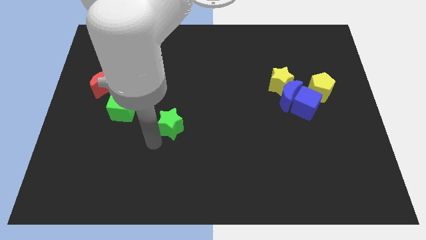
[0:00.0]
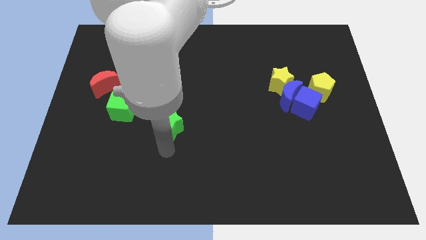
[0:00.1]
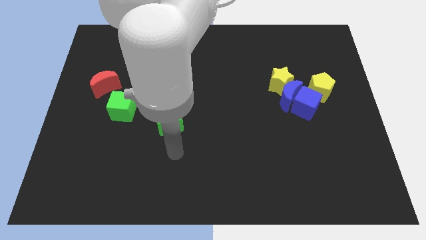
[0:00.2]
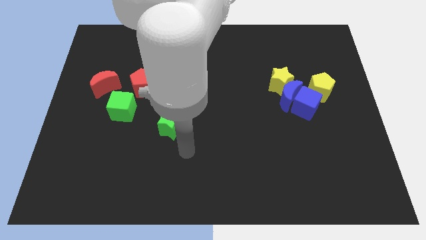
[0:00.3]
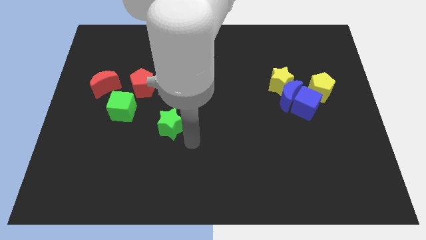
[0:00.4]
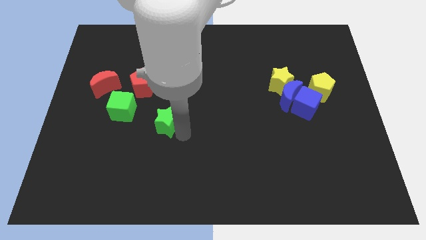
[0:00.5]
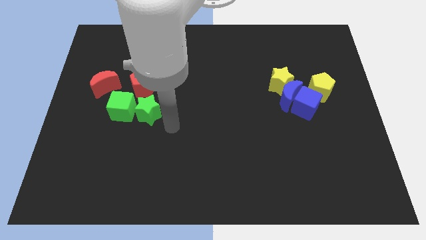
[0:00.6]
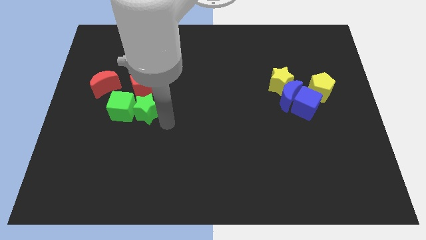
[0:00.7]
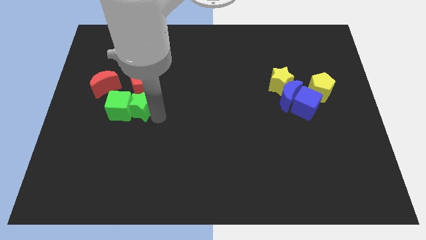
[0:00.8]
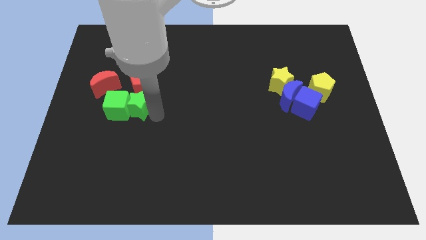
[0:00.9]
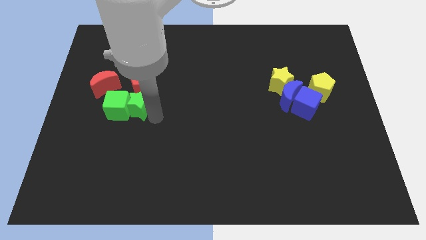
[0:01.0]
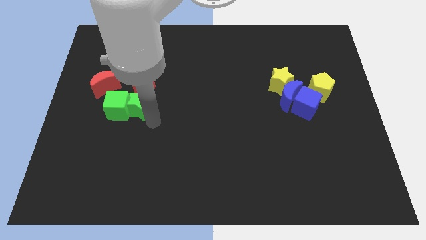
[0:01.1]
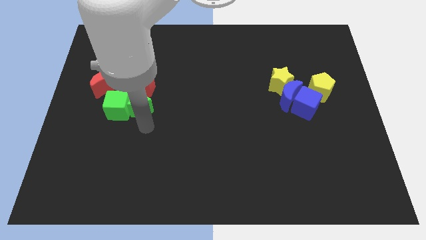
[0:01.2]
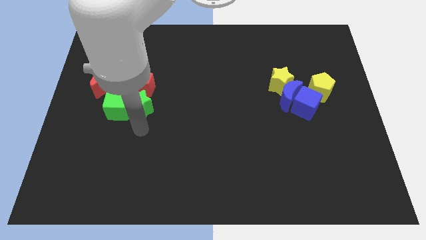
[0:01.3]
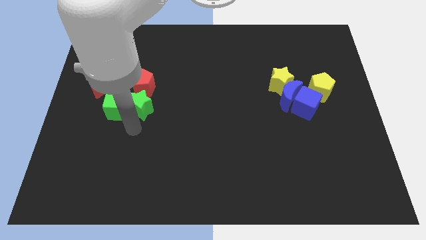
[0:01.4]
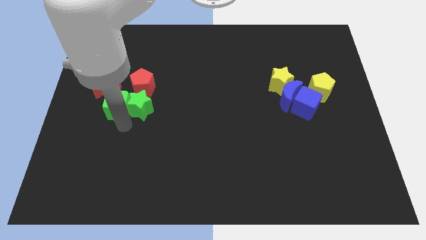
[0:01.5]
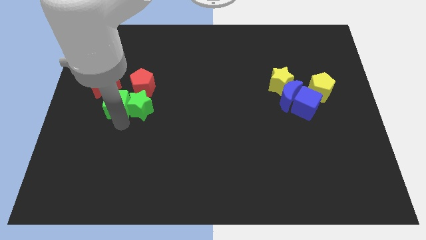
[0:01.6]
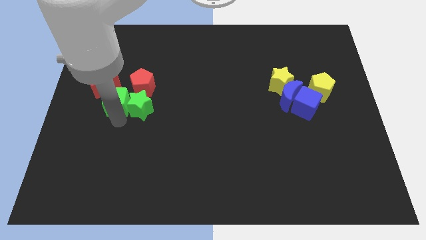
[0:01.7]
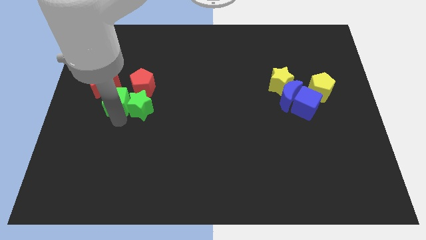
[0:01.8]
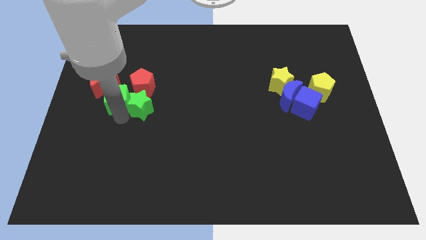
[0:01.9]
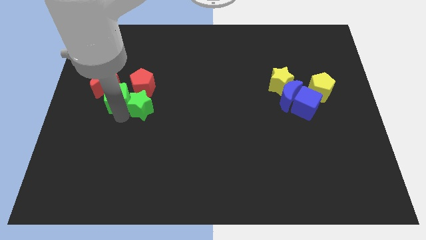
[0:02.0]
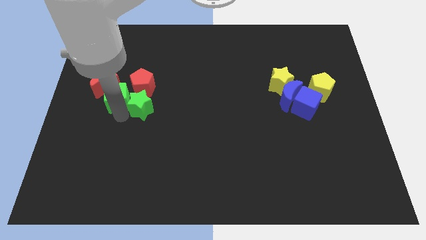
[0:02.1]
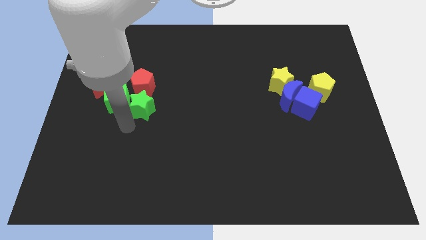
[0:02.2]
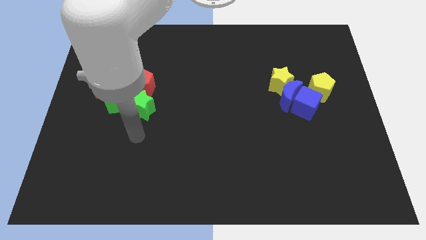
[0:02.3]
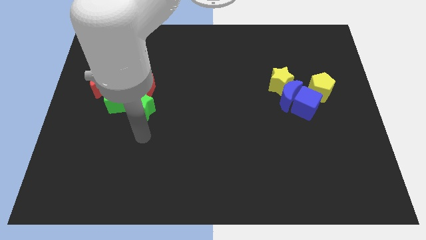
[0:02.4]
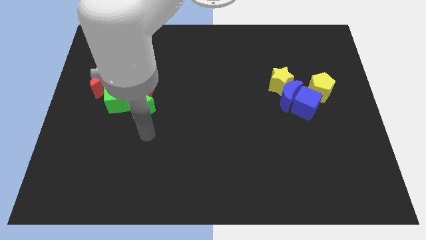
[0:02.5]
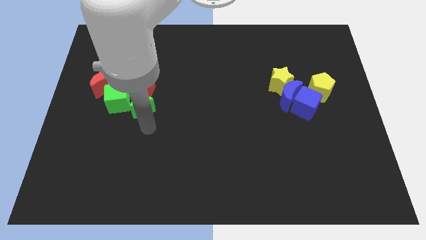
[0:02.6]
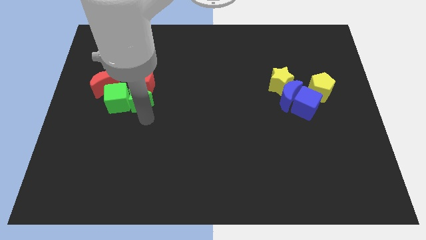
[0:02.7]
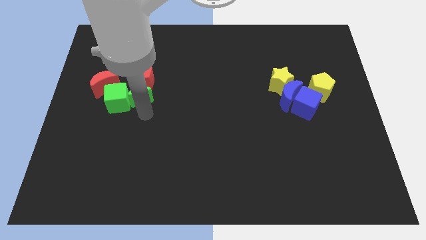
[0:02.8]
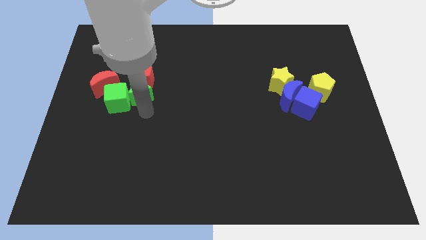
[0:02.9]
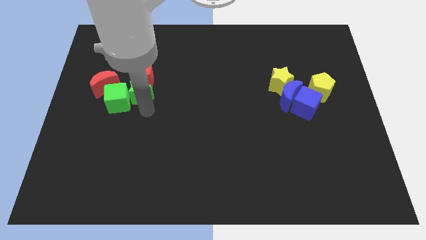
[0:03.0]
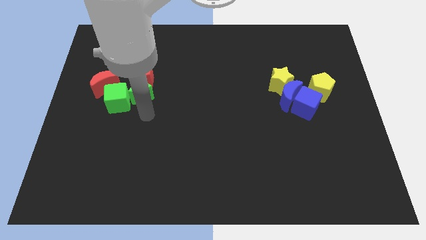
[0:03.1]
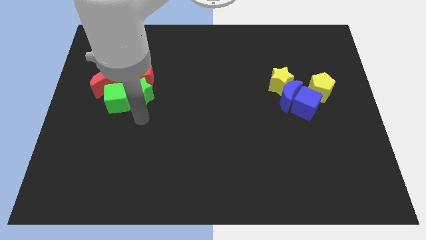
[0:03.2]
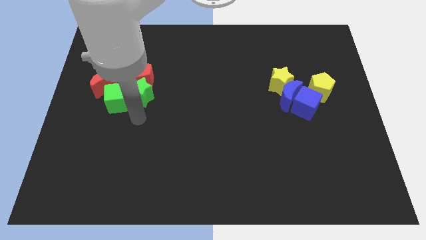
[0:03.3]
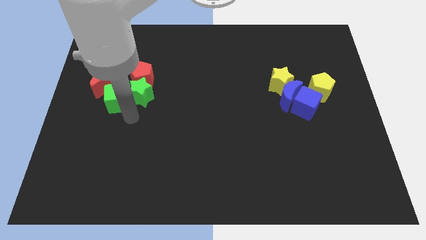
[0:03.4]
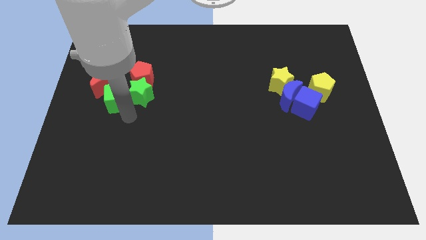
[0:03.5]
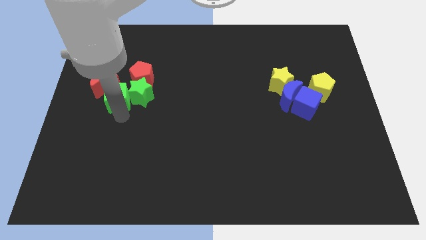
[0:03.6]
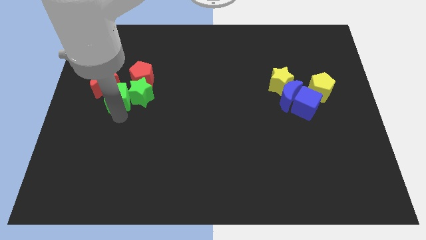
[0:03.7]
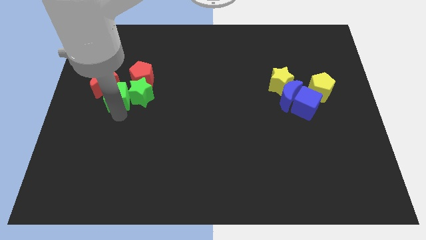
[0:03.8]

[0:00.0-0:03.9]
drag the green star below the red pentagon

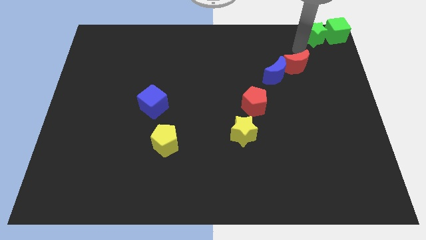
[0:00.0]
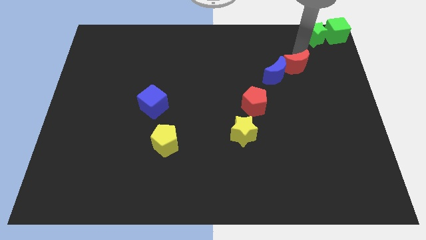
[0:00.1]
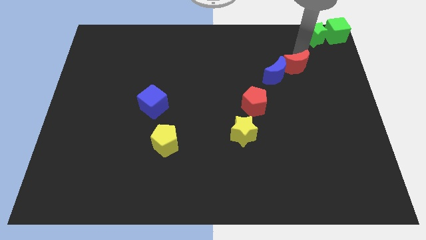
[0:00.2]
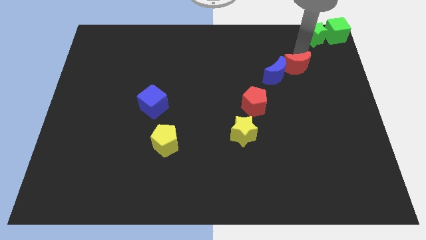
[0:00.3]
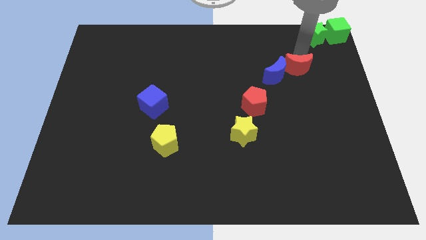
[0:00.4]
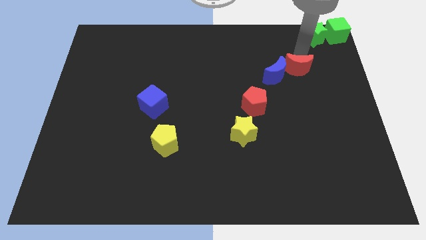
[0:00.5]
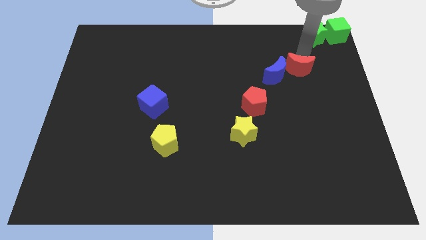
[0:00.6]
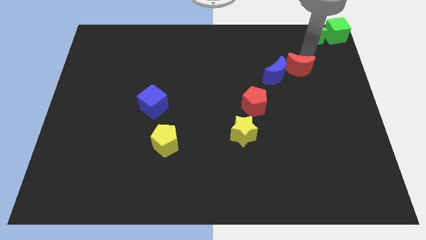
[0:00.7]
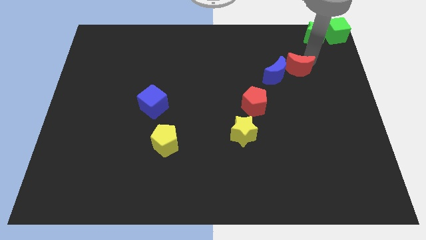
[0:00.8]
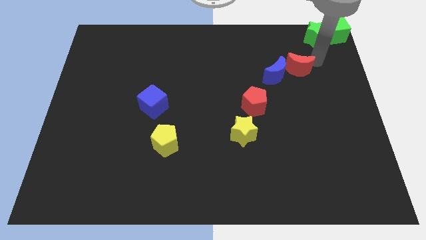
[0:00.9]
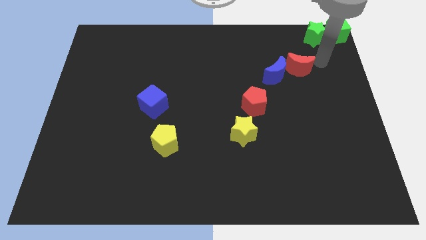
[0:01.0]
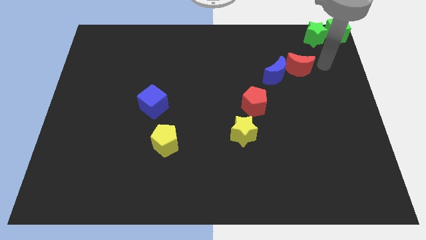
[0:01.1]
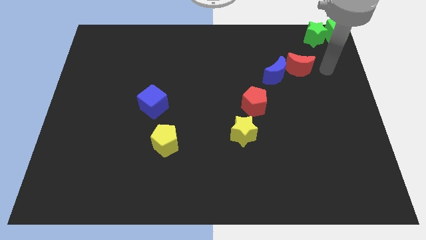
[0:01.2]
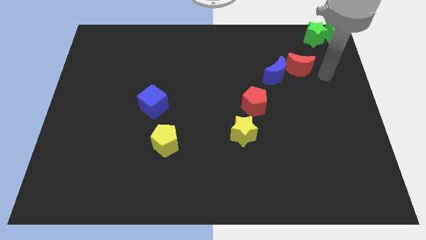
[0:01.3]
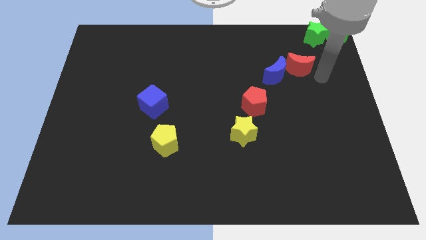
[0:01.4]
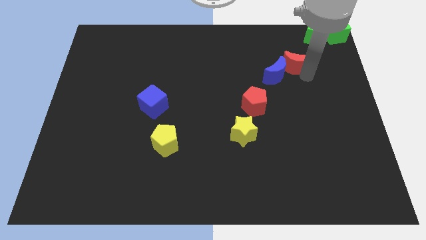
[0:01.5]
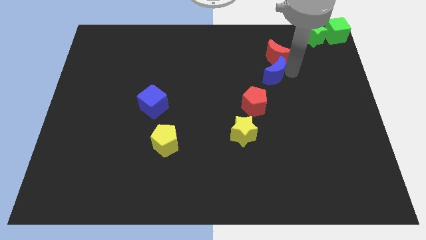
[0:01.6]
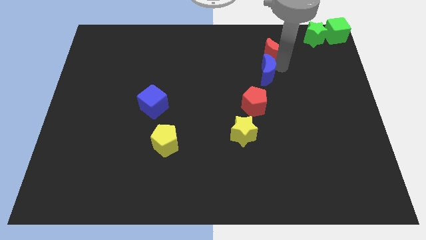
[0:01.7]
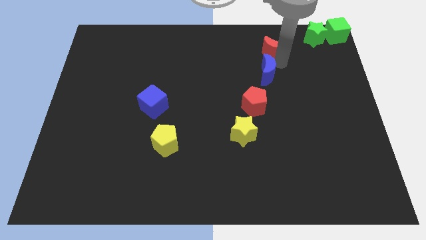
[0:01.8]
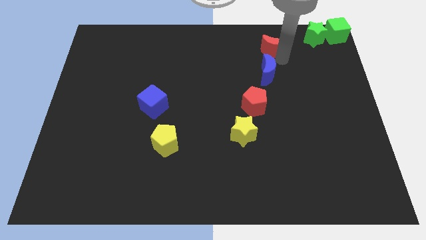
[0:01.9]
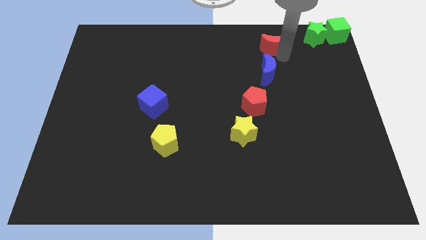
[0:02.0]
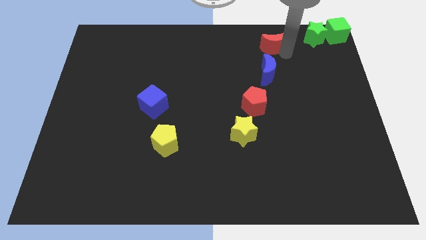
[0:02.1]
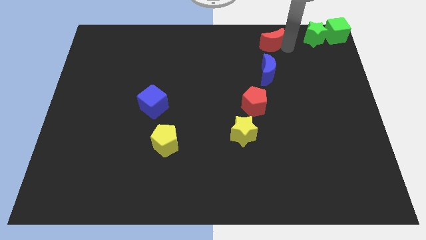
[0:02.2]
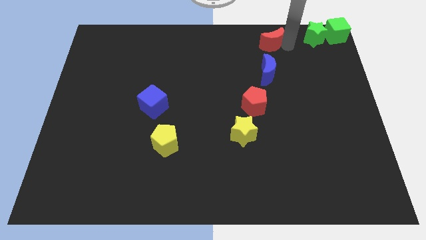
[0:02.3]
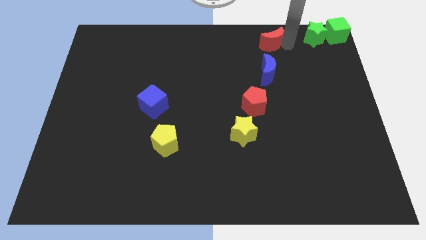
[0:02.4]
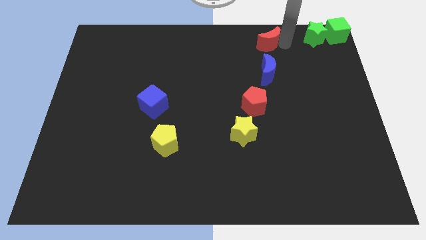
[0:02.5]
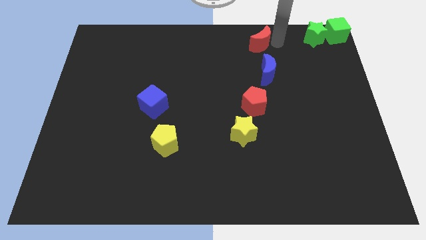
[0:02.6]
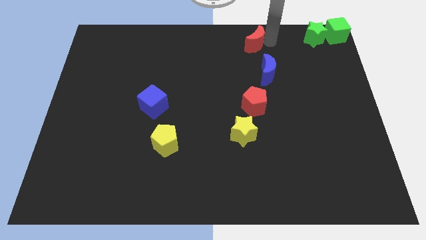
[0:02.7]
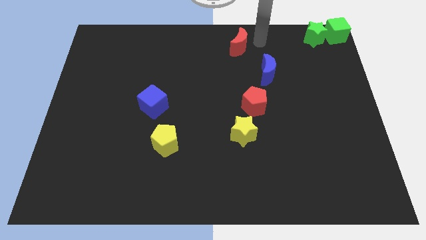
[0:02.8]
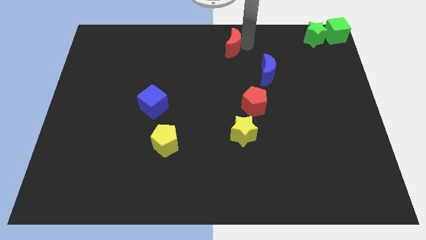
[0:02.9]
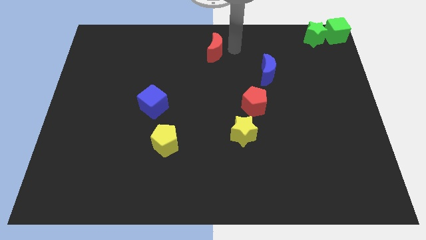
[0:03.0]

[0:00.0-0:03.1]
place the red crescent at the top side of the board

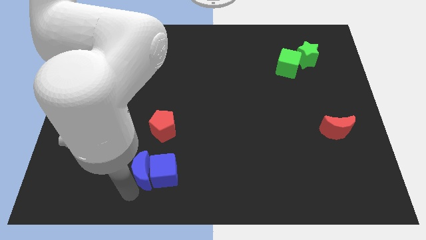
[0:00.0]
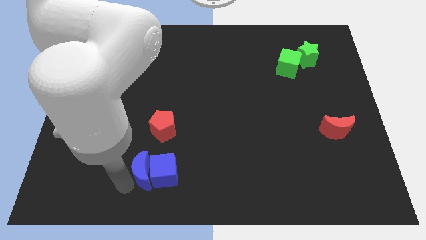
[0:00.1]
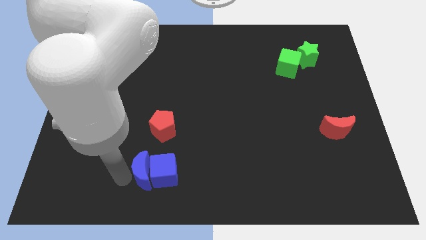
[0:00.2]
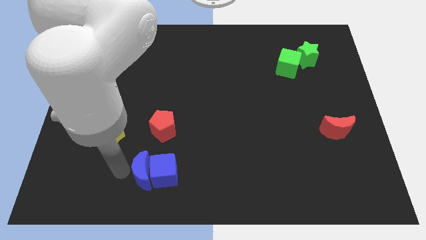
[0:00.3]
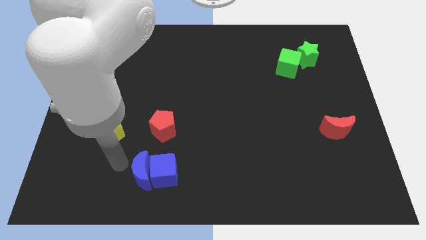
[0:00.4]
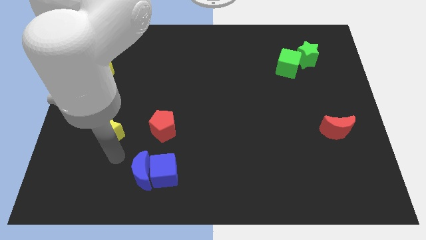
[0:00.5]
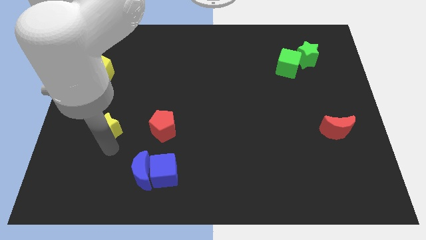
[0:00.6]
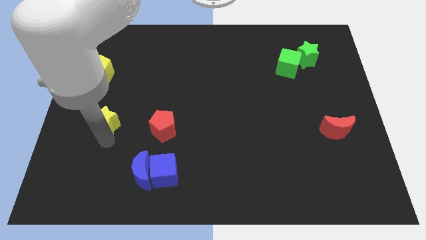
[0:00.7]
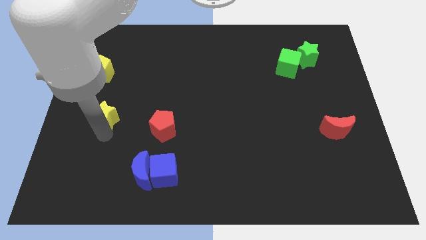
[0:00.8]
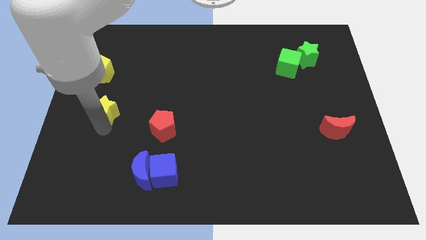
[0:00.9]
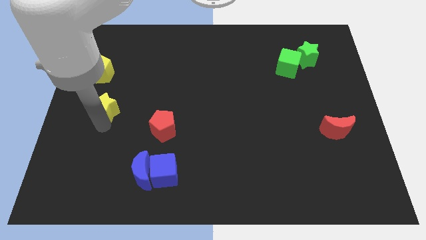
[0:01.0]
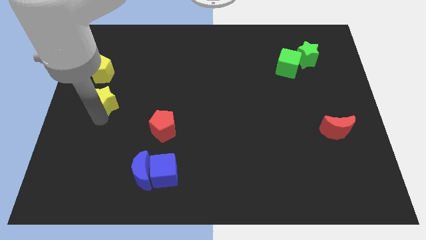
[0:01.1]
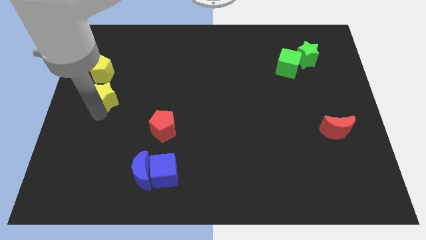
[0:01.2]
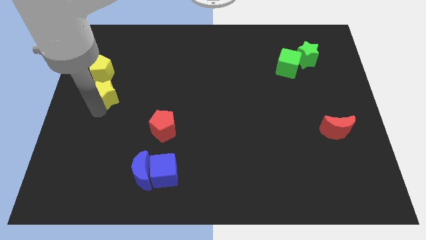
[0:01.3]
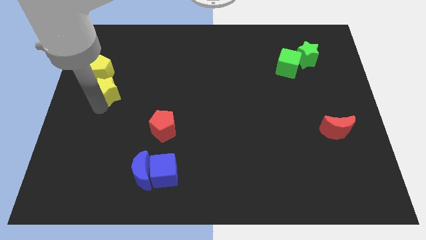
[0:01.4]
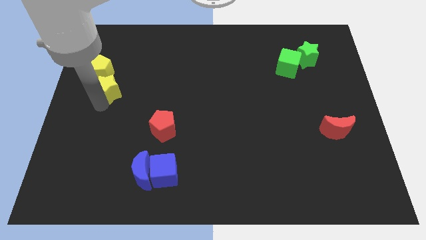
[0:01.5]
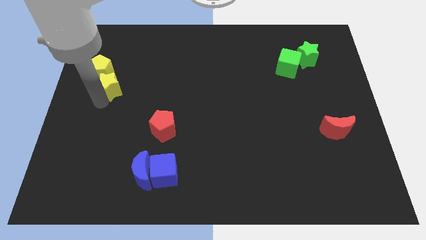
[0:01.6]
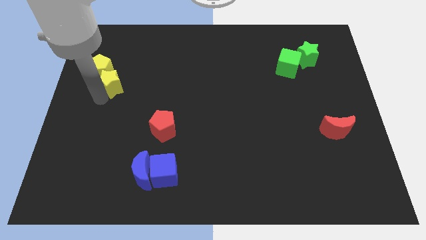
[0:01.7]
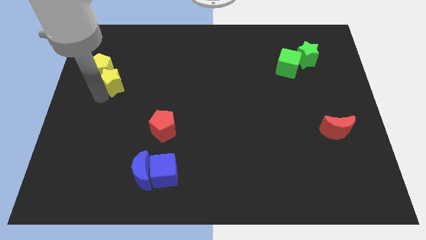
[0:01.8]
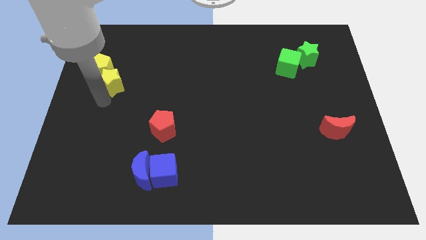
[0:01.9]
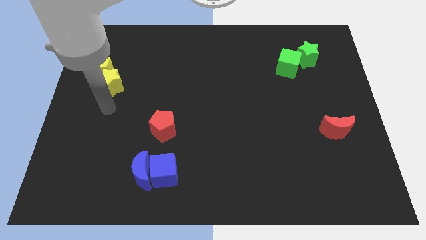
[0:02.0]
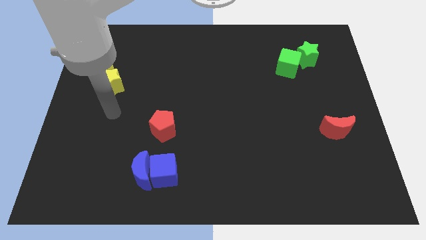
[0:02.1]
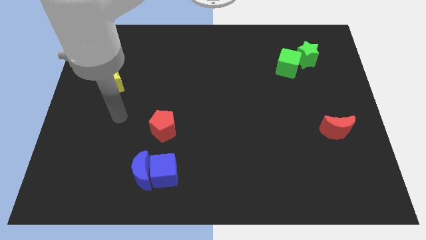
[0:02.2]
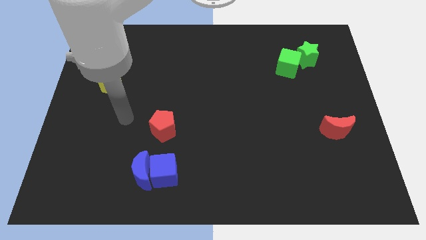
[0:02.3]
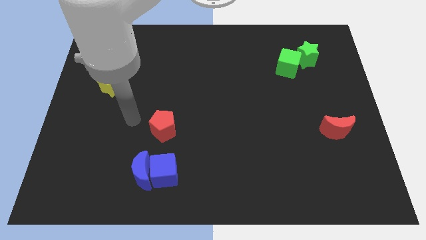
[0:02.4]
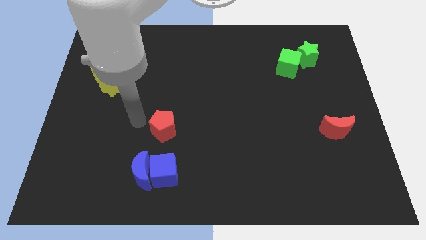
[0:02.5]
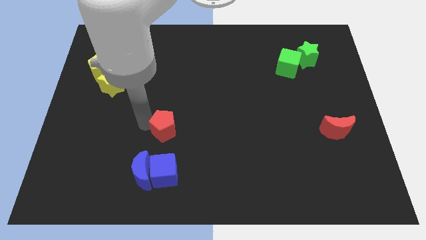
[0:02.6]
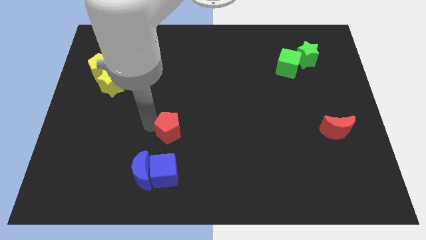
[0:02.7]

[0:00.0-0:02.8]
move the yellow star close to the yellow pentagon
